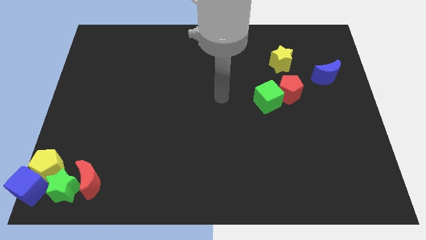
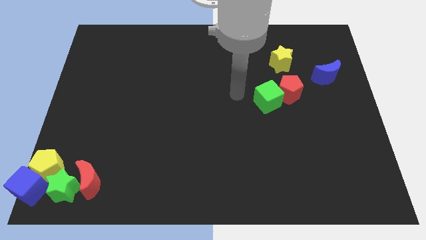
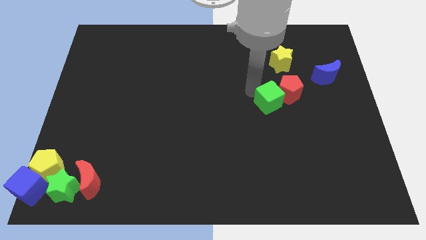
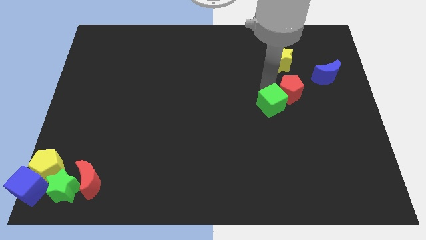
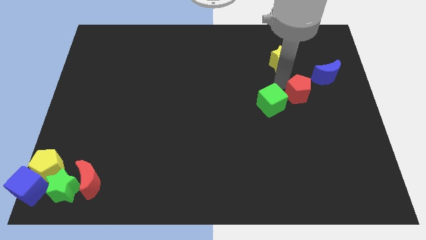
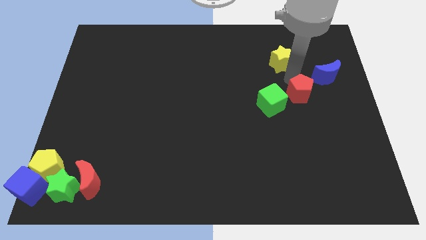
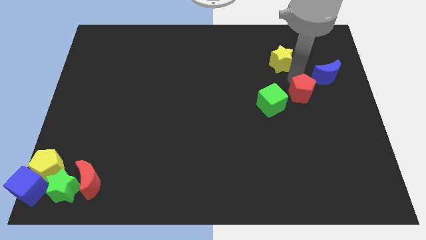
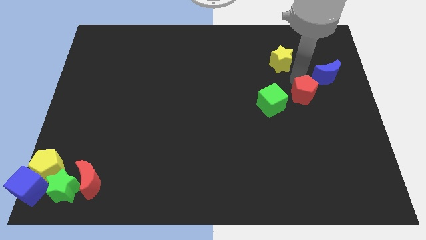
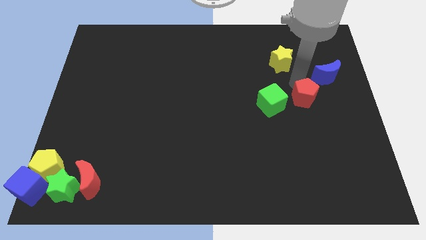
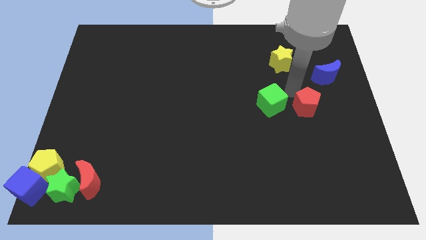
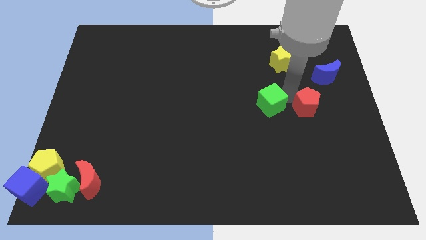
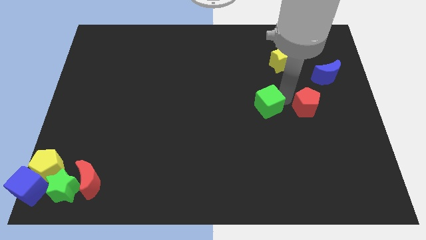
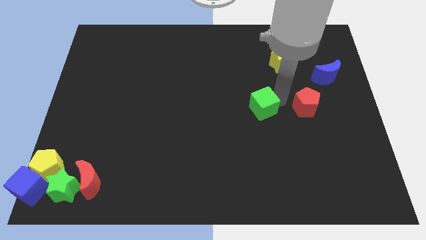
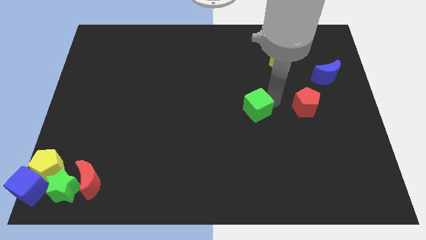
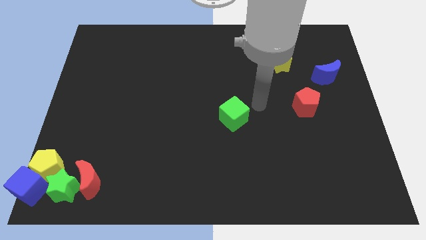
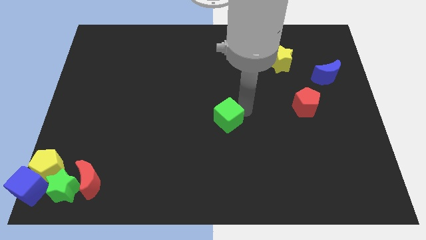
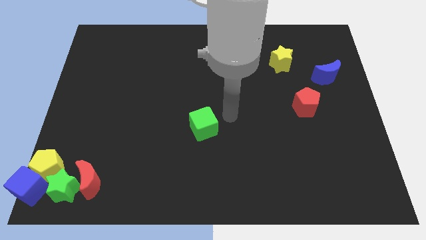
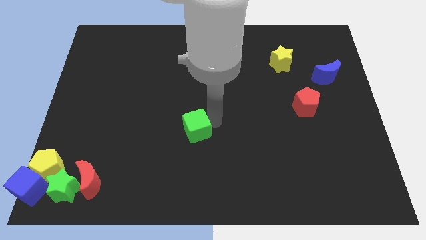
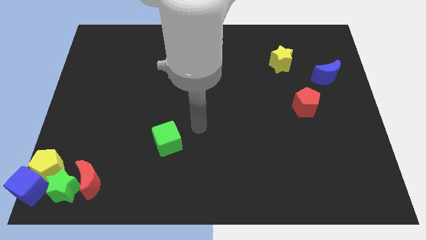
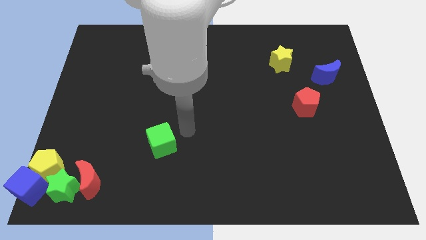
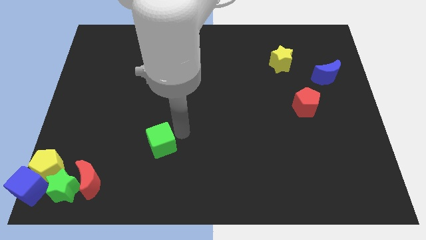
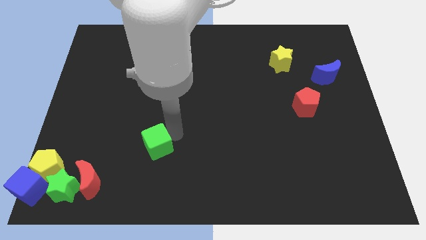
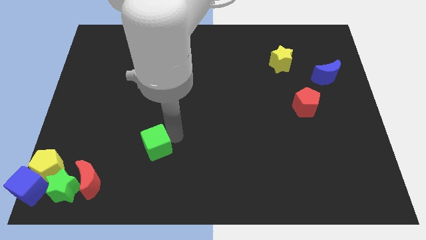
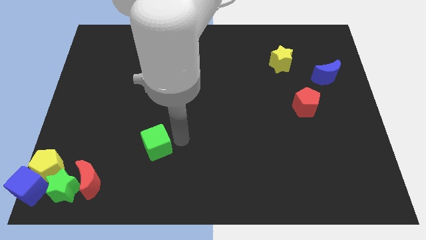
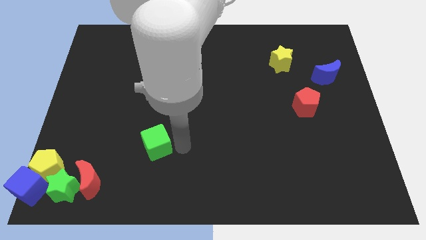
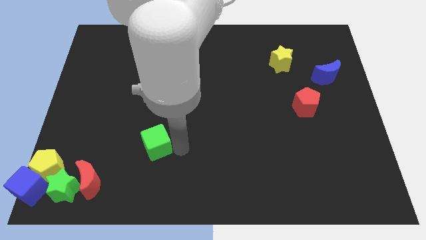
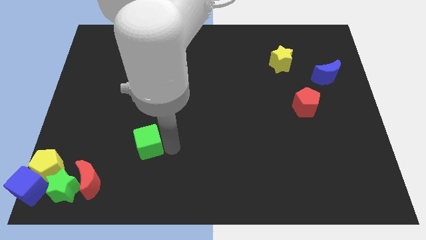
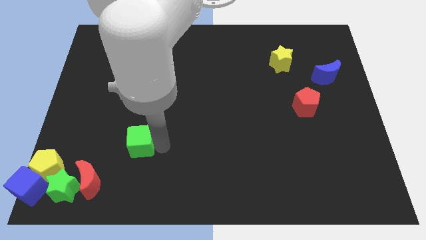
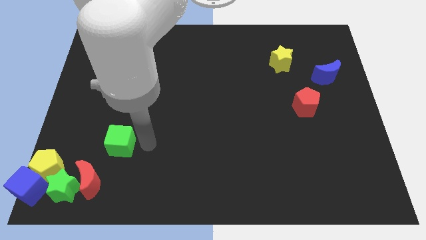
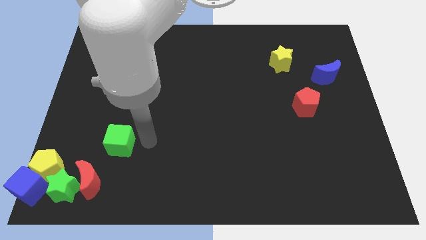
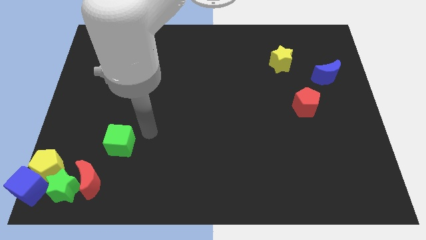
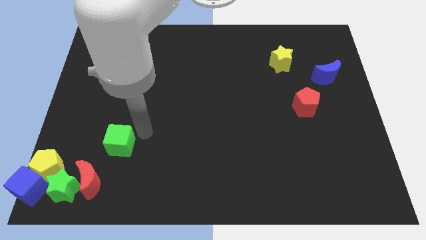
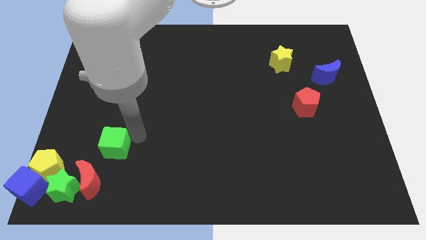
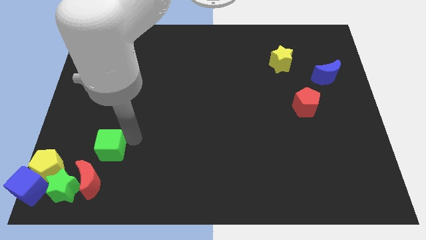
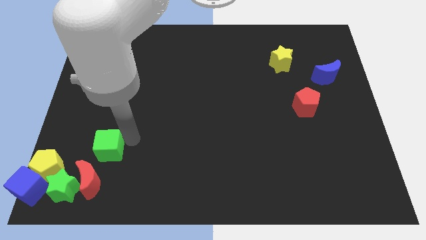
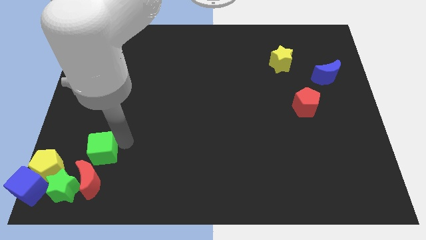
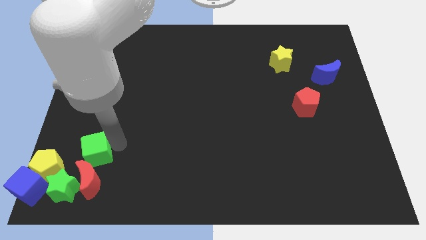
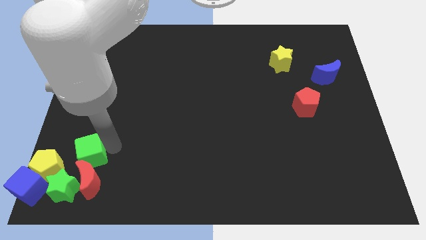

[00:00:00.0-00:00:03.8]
slide the green cube towards the top side of the red moon

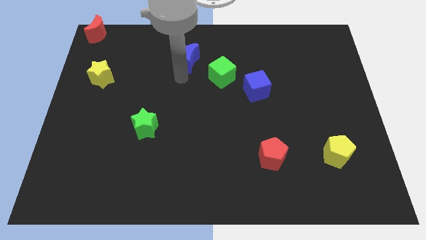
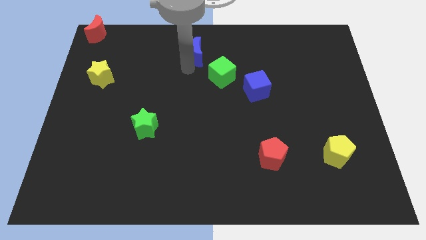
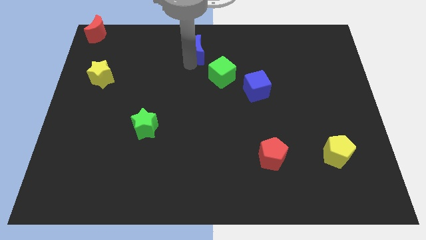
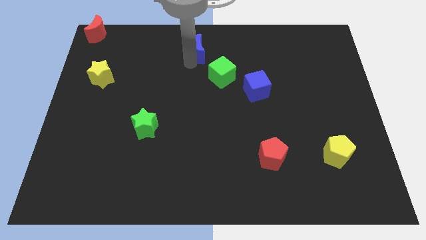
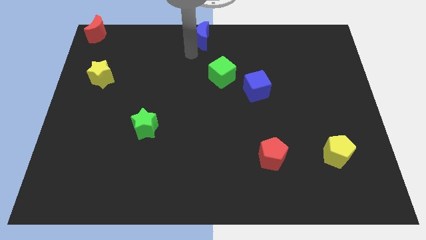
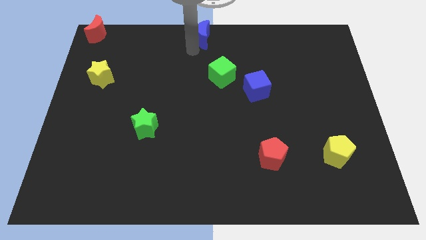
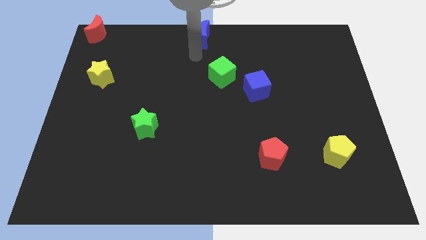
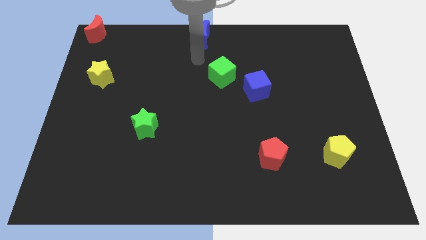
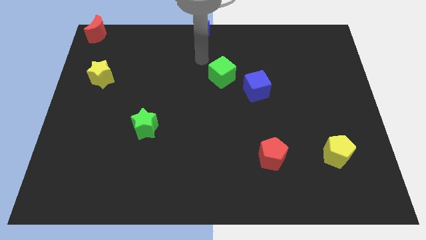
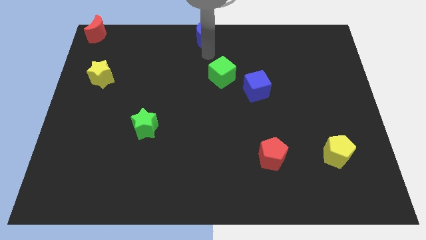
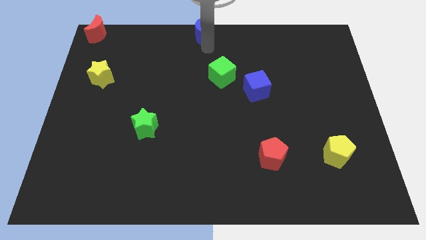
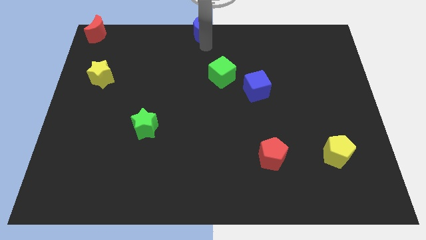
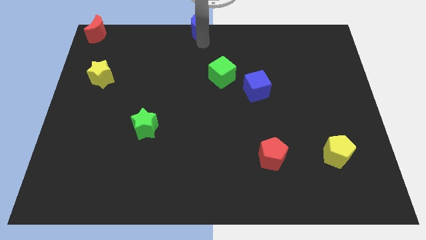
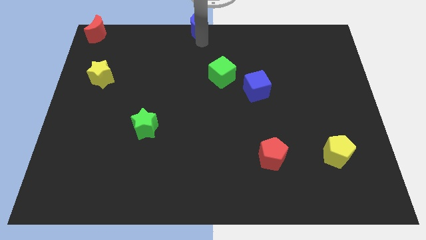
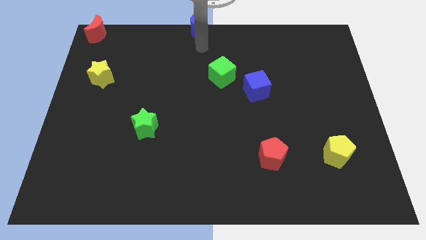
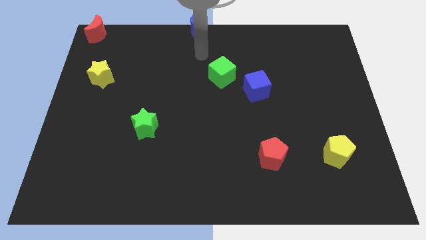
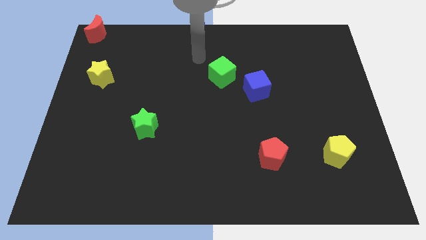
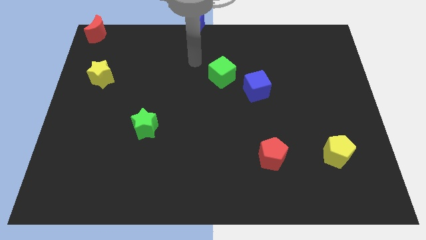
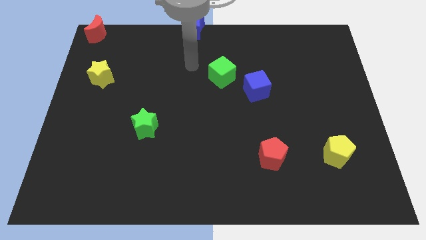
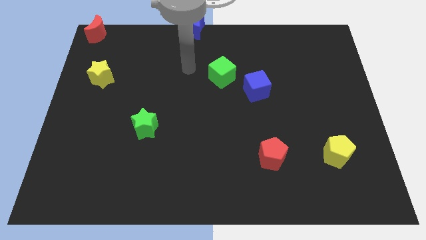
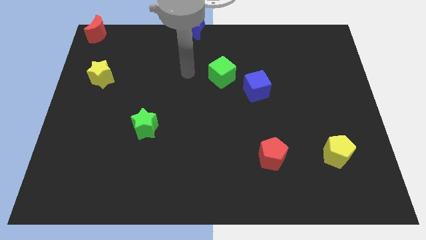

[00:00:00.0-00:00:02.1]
push blue moon to the top center

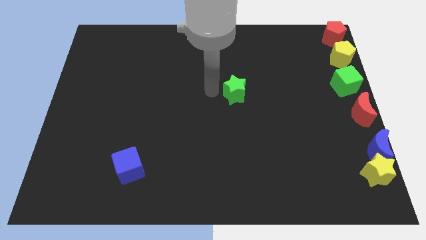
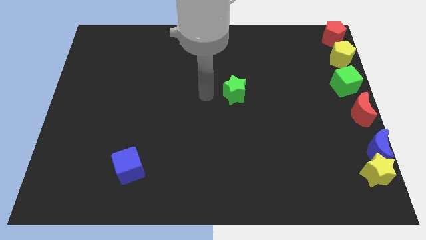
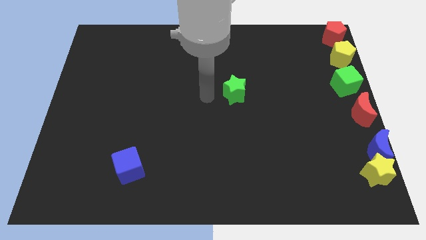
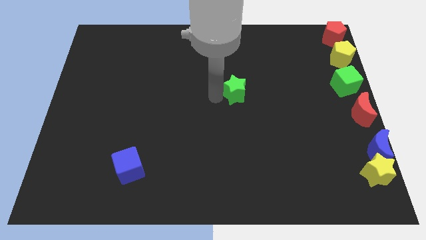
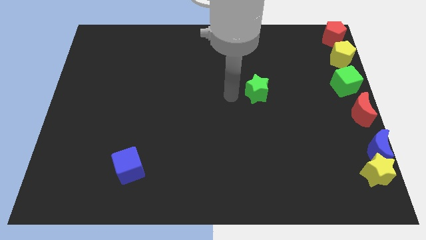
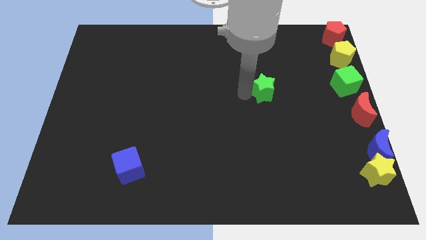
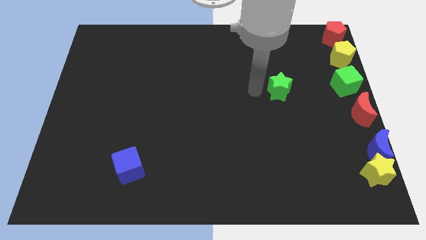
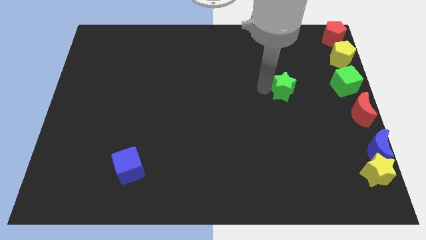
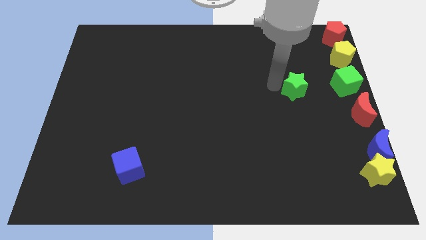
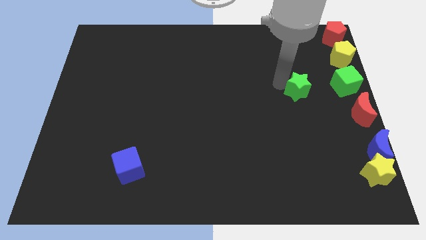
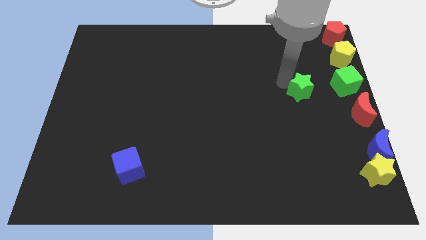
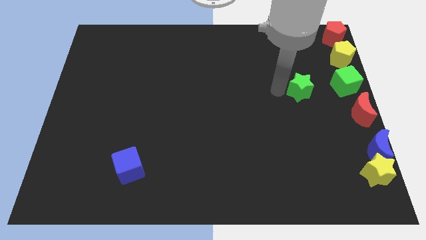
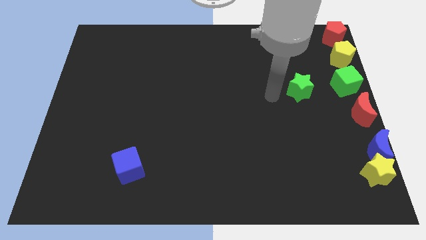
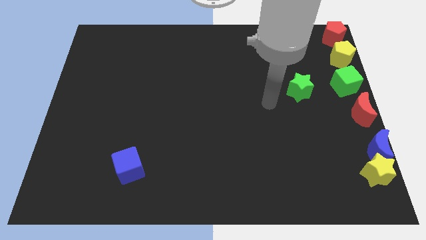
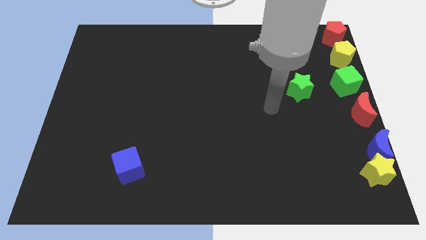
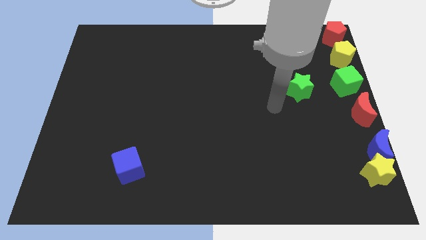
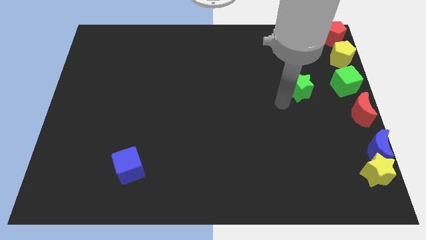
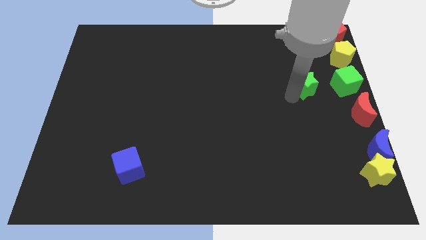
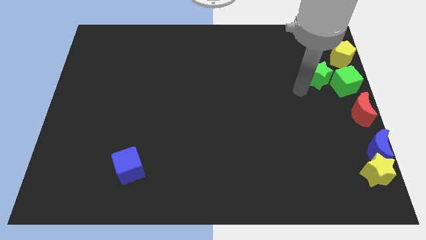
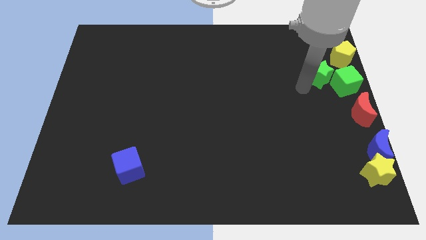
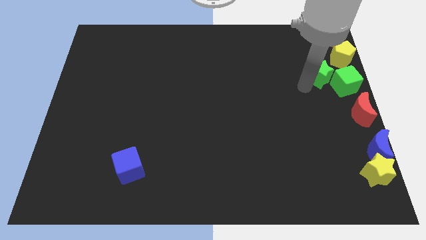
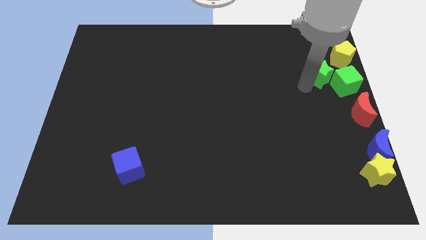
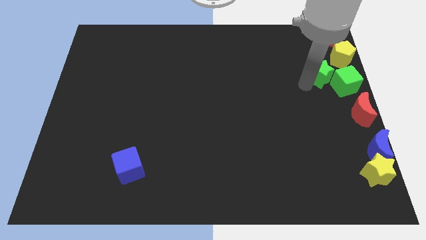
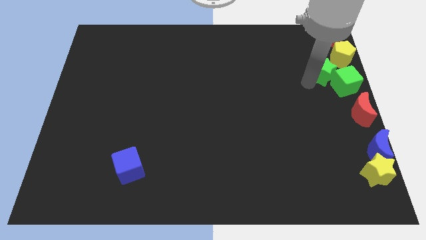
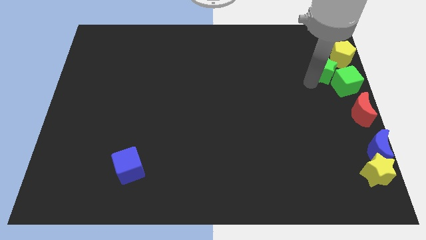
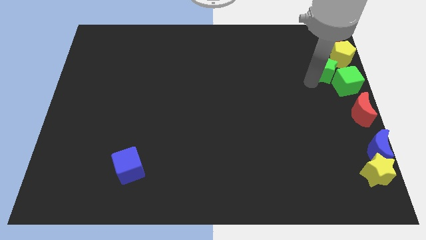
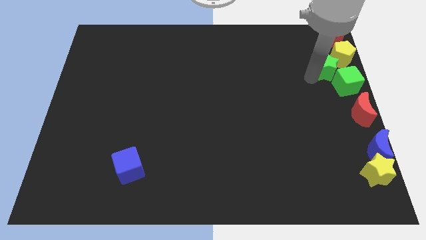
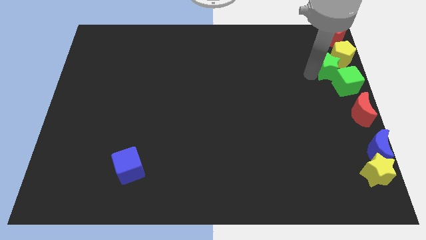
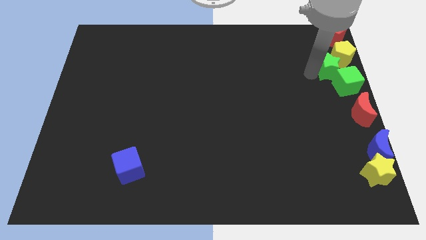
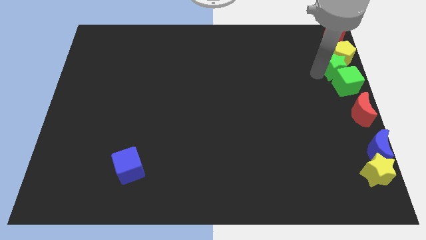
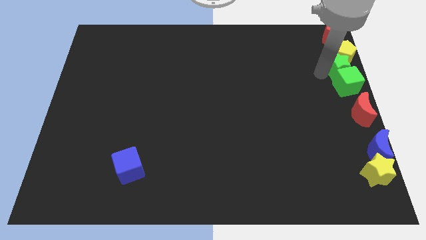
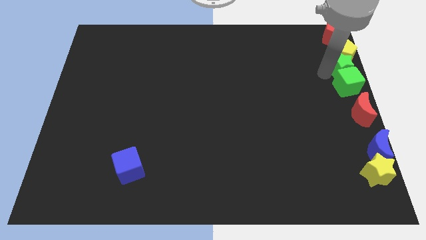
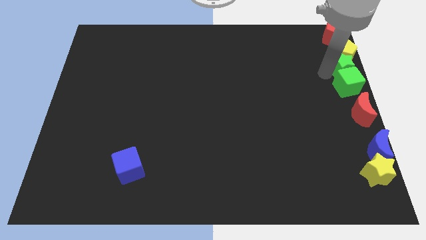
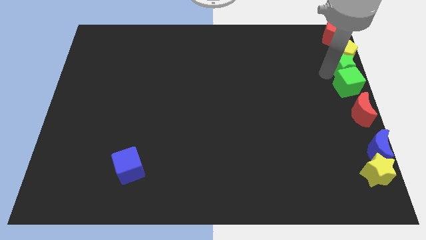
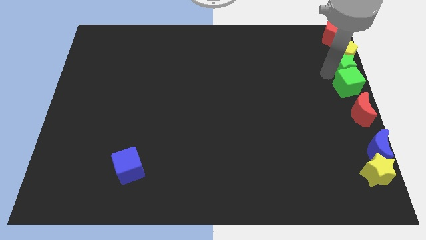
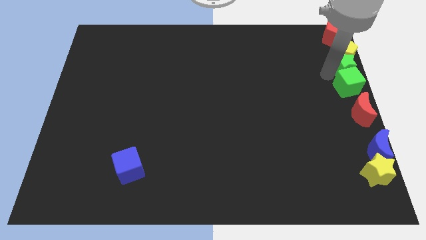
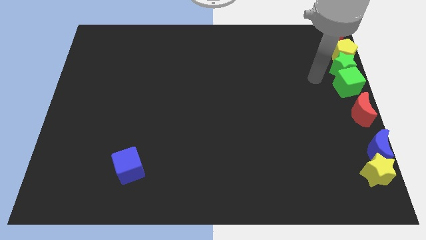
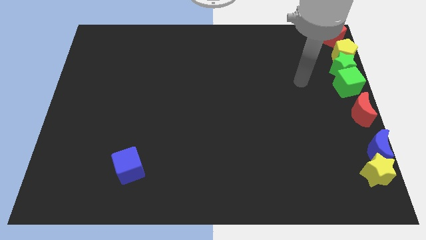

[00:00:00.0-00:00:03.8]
place the green star in between yellow pentagon and green cube
